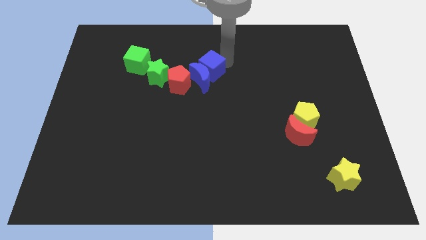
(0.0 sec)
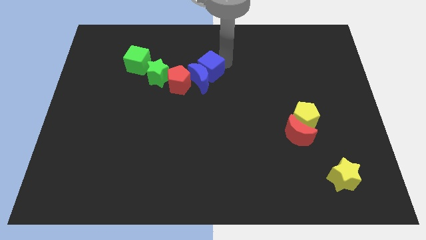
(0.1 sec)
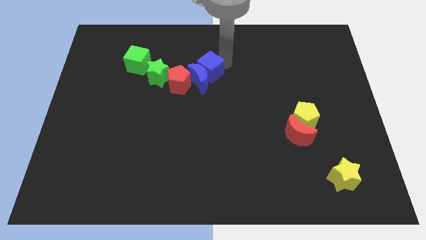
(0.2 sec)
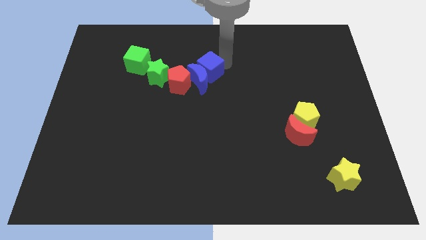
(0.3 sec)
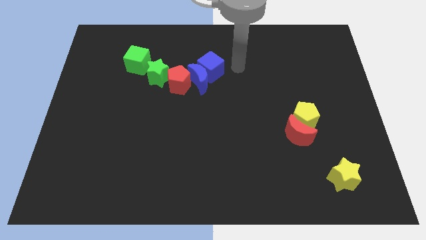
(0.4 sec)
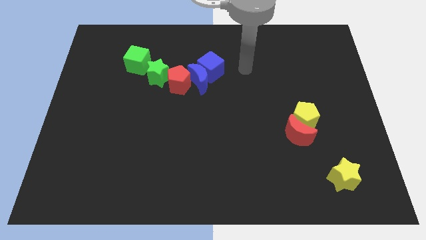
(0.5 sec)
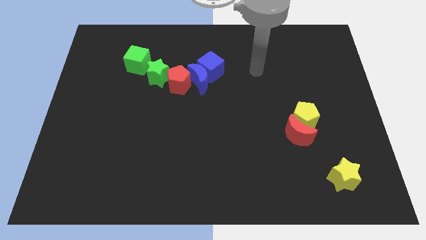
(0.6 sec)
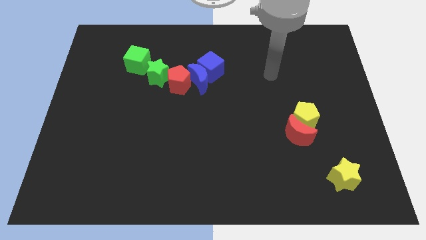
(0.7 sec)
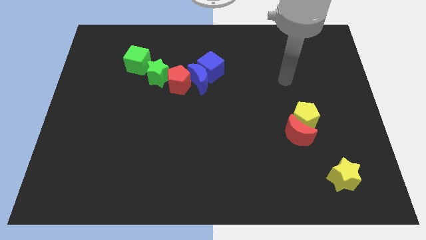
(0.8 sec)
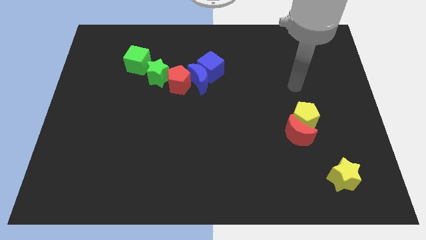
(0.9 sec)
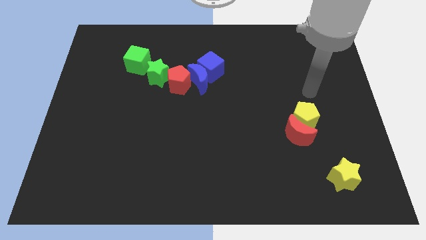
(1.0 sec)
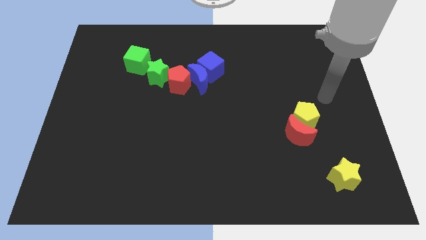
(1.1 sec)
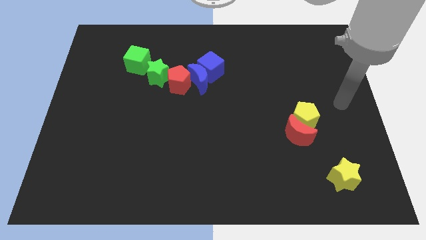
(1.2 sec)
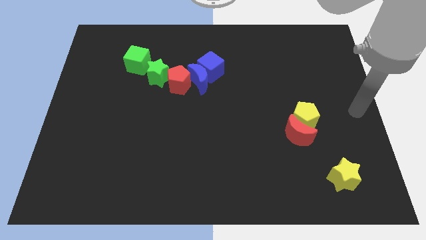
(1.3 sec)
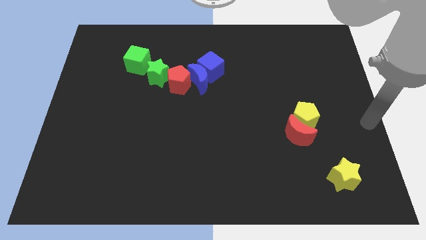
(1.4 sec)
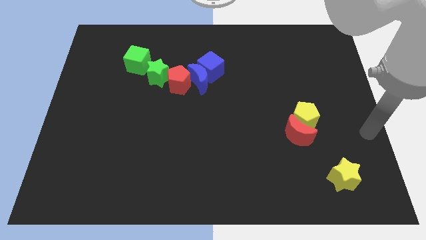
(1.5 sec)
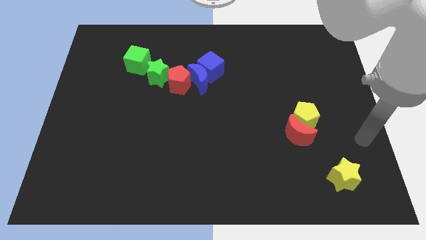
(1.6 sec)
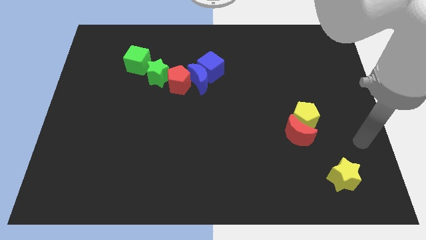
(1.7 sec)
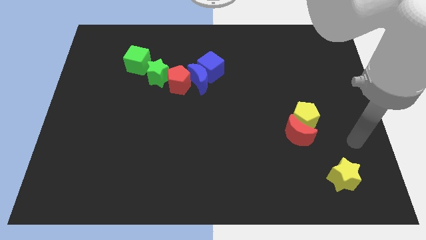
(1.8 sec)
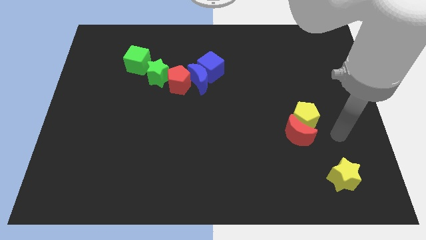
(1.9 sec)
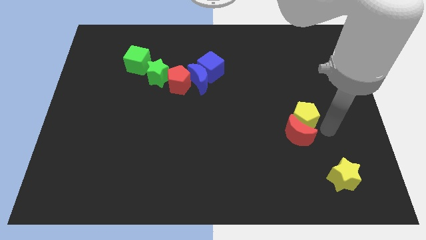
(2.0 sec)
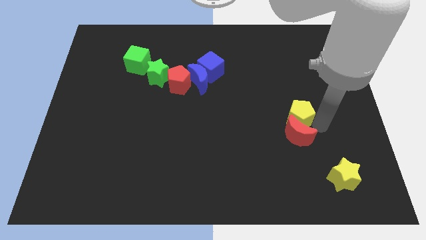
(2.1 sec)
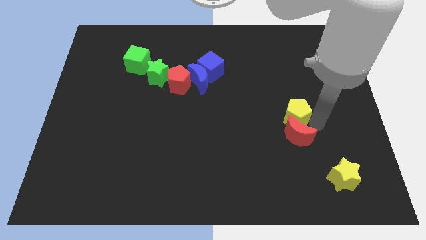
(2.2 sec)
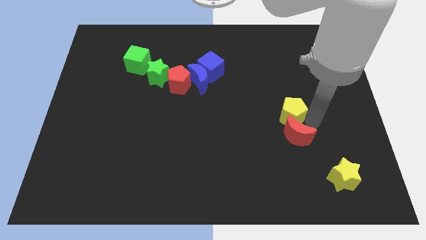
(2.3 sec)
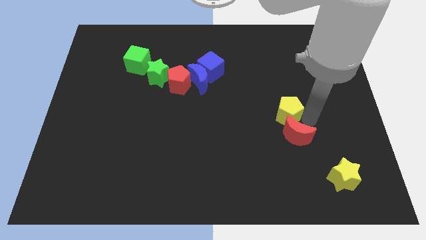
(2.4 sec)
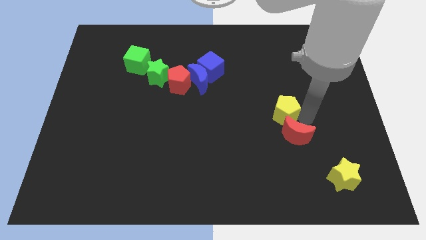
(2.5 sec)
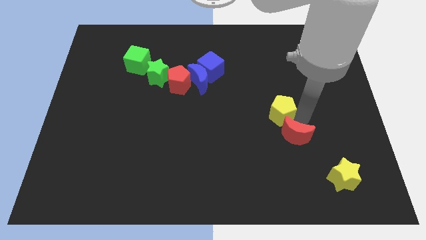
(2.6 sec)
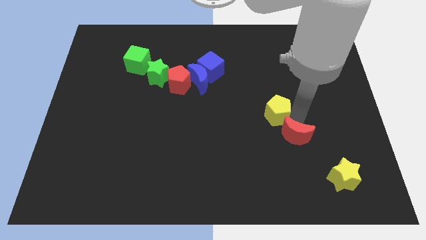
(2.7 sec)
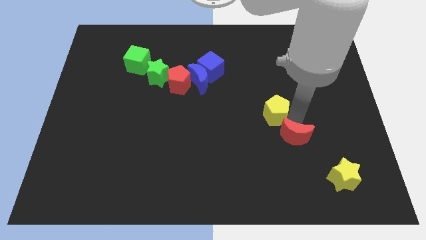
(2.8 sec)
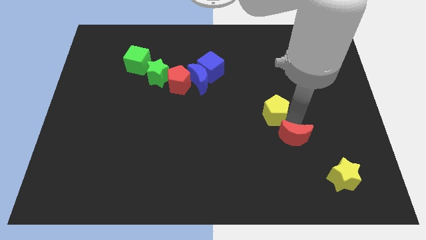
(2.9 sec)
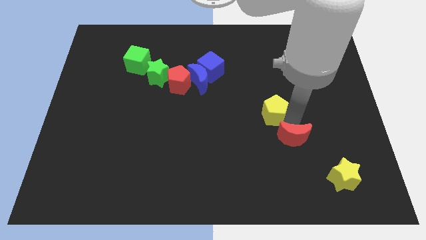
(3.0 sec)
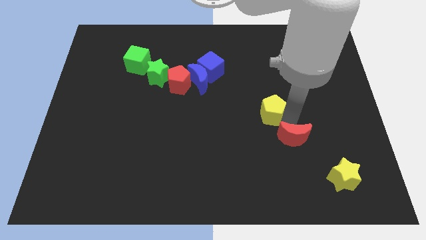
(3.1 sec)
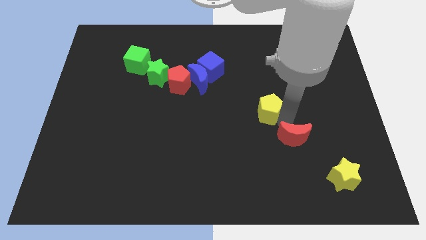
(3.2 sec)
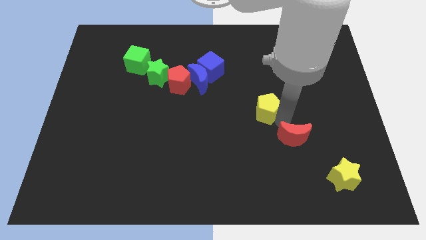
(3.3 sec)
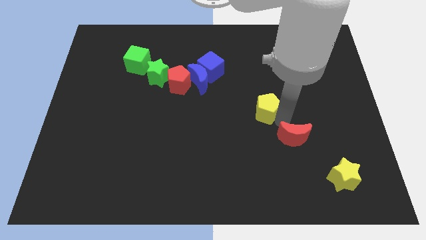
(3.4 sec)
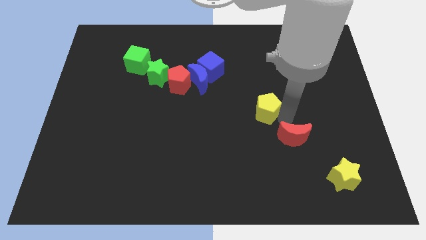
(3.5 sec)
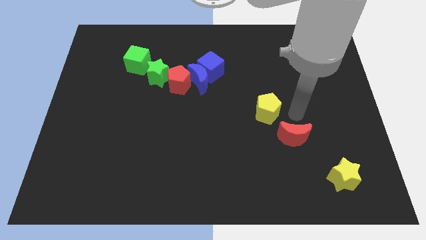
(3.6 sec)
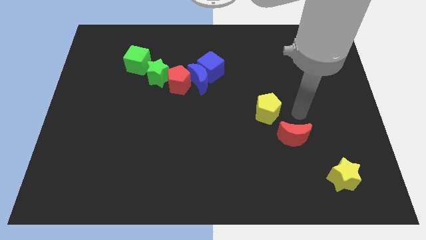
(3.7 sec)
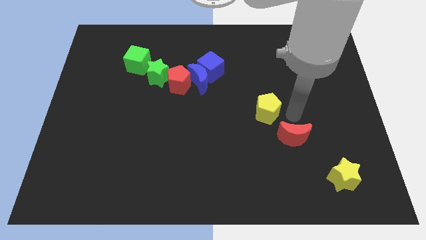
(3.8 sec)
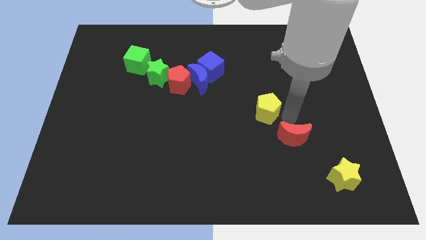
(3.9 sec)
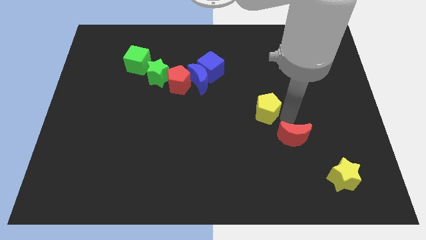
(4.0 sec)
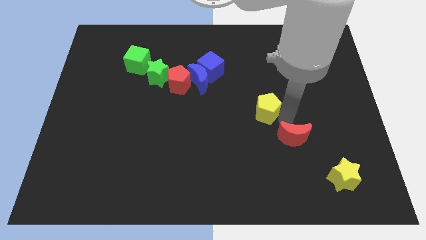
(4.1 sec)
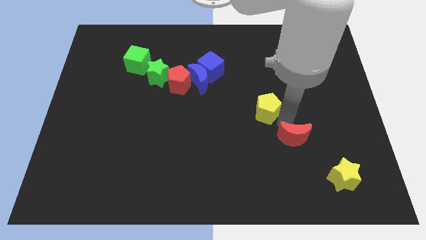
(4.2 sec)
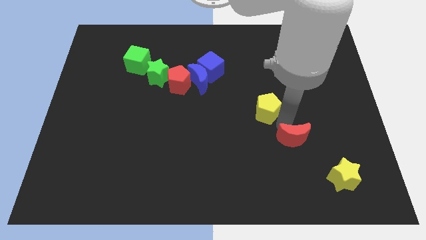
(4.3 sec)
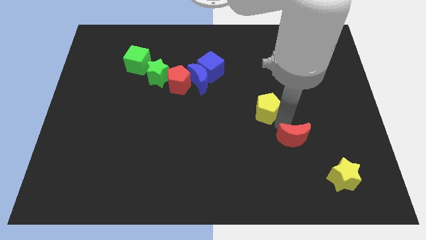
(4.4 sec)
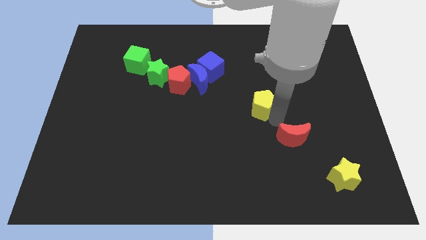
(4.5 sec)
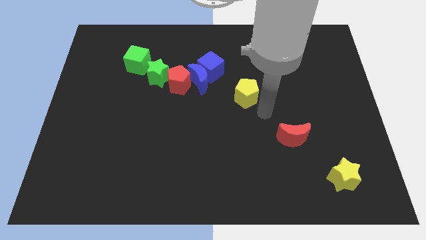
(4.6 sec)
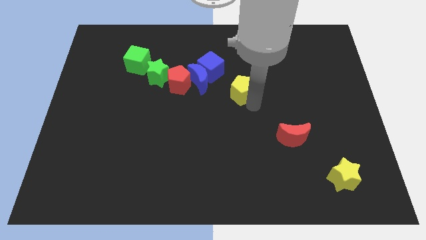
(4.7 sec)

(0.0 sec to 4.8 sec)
push yellow pentagon towards the blue cube

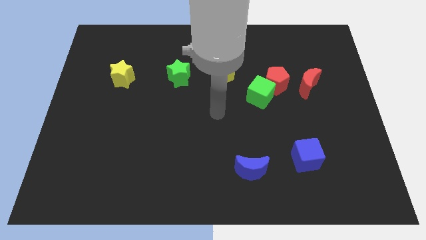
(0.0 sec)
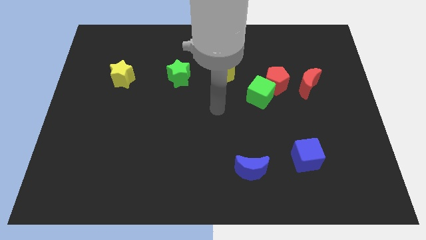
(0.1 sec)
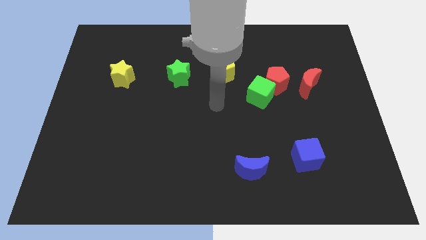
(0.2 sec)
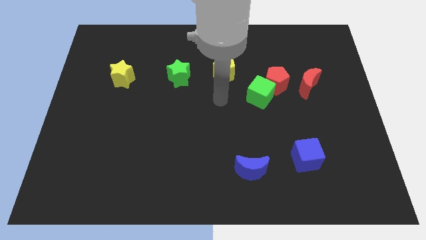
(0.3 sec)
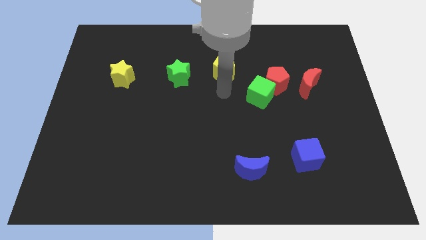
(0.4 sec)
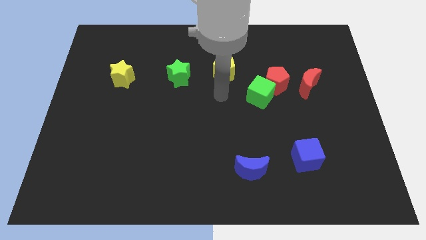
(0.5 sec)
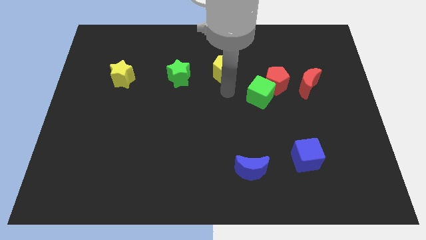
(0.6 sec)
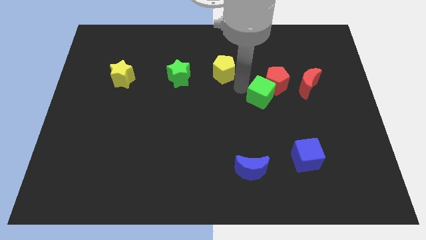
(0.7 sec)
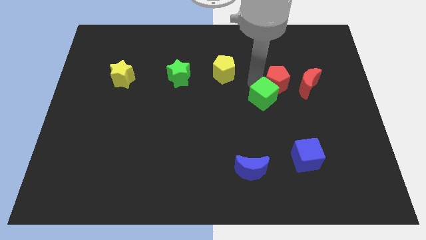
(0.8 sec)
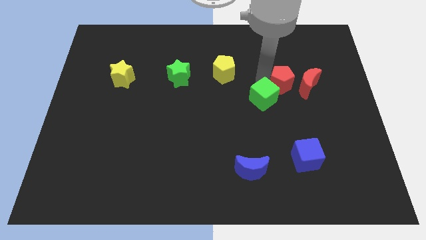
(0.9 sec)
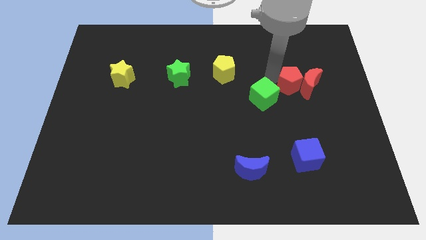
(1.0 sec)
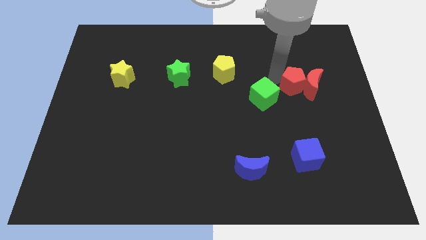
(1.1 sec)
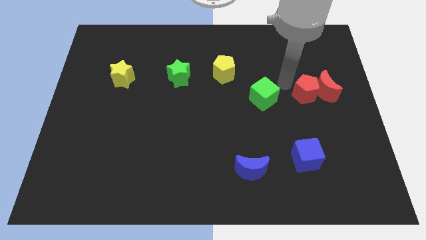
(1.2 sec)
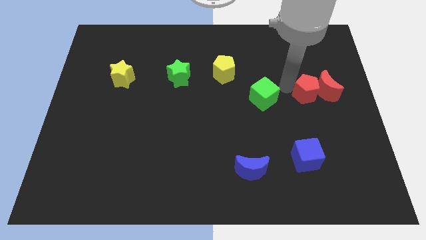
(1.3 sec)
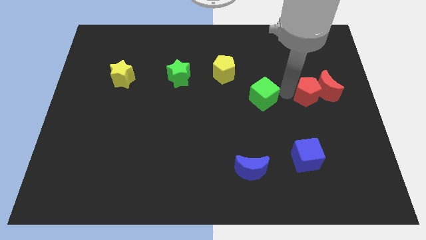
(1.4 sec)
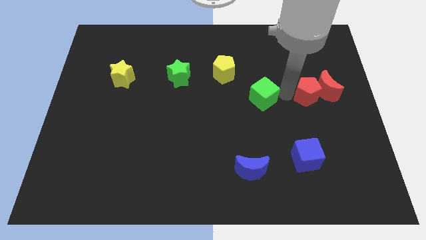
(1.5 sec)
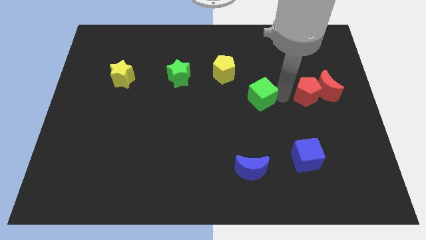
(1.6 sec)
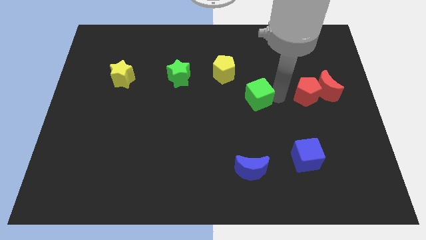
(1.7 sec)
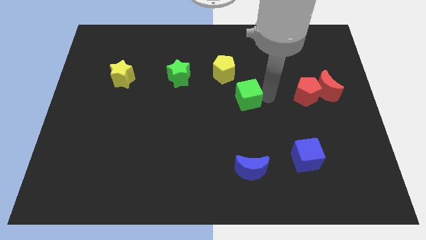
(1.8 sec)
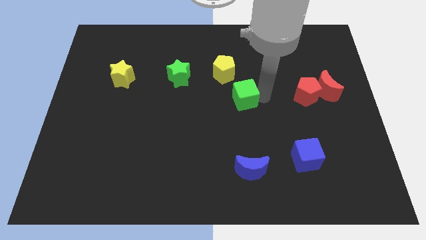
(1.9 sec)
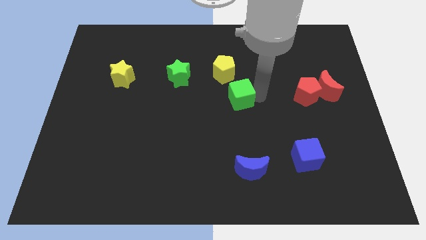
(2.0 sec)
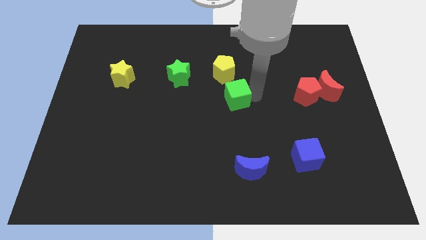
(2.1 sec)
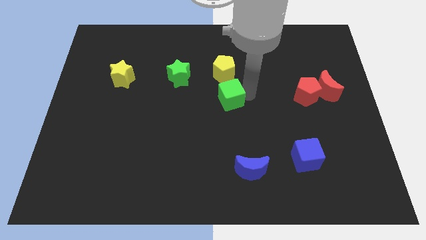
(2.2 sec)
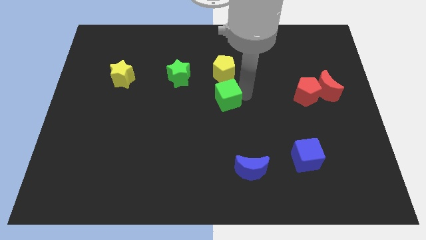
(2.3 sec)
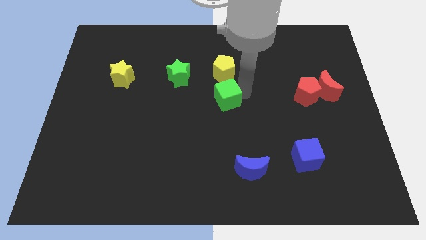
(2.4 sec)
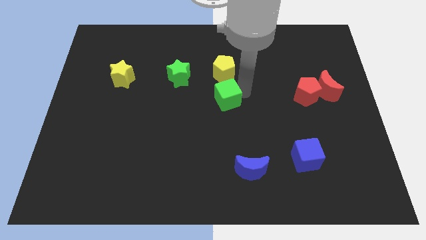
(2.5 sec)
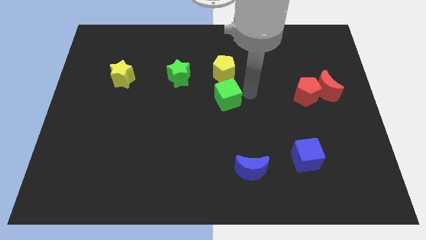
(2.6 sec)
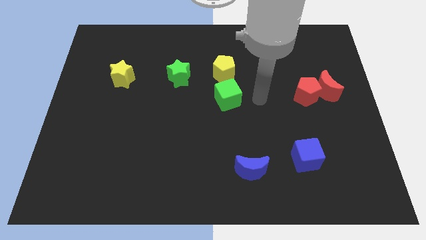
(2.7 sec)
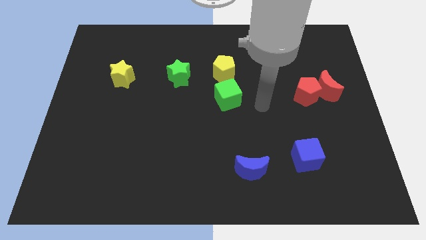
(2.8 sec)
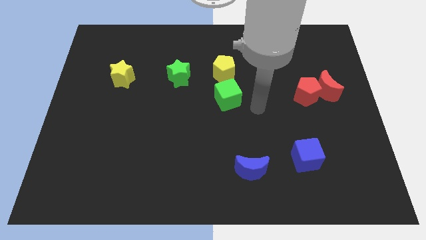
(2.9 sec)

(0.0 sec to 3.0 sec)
separate the green cube from the red pentagon

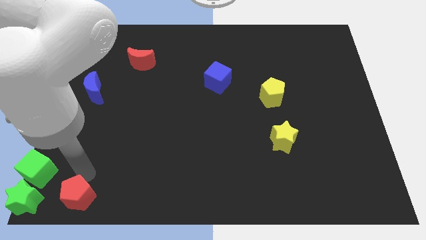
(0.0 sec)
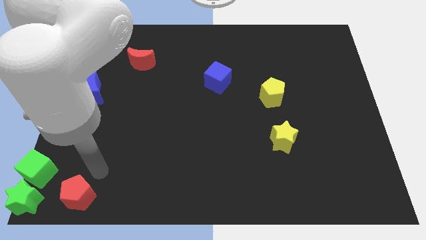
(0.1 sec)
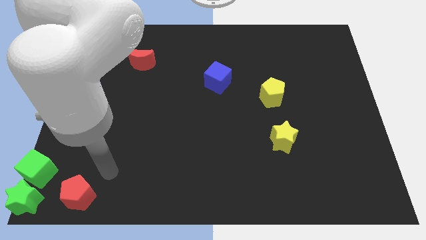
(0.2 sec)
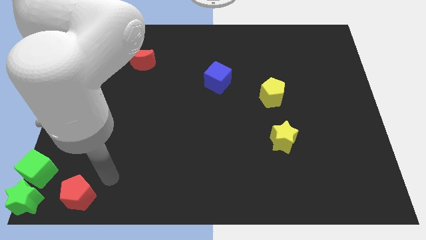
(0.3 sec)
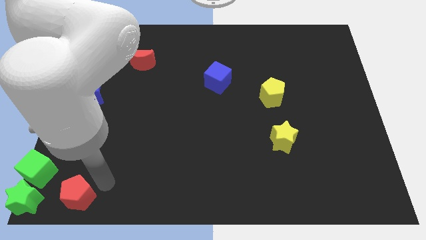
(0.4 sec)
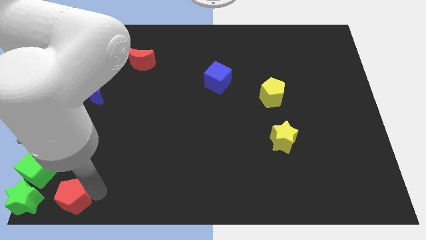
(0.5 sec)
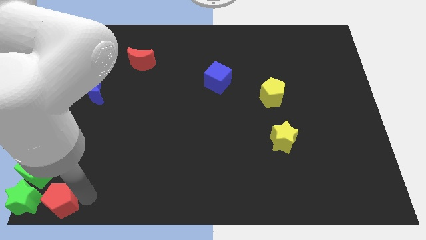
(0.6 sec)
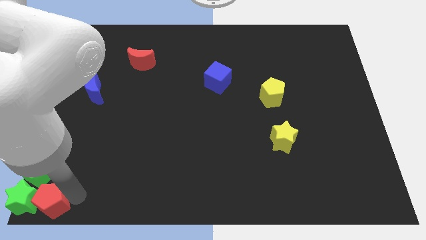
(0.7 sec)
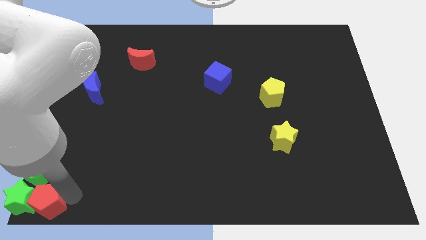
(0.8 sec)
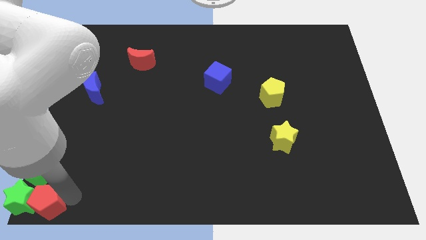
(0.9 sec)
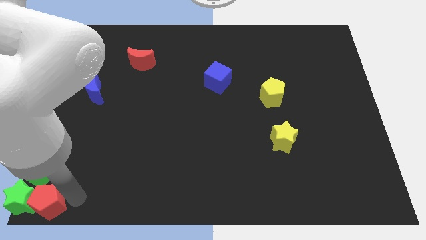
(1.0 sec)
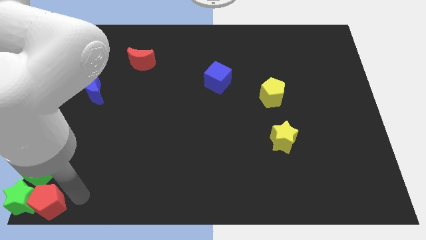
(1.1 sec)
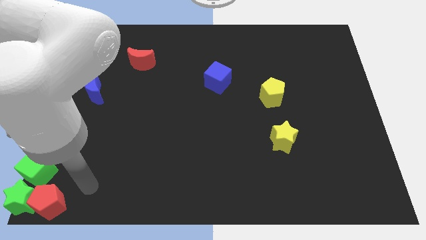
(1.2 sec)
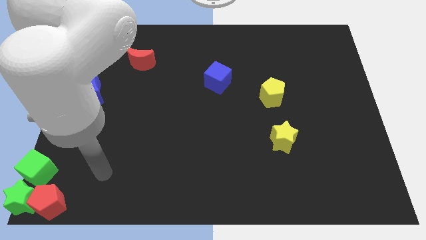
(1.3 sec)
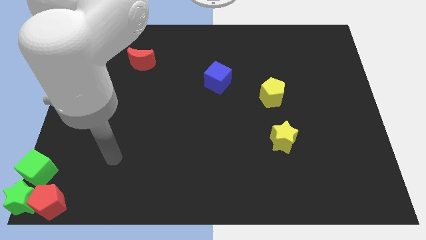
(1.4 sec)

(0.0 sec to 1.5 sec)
push the red pentagon towards the bottom left corner of the board
